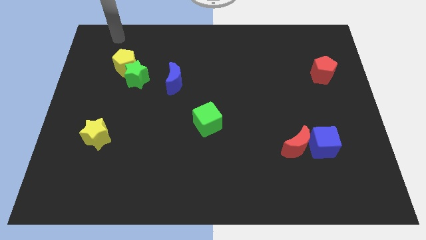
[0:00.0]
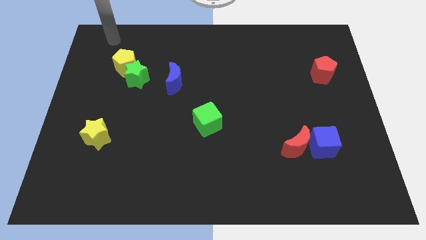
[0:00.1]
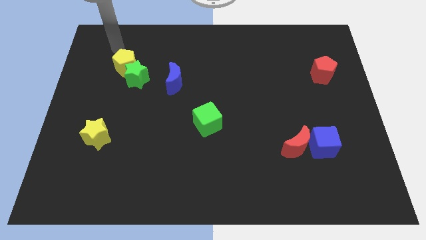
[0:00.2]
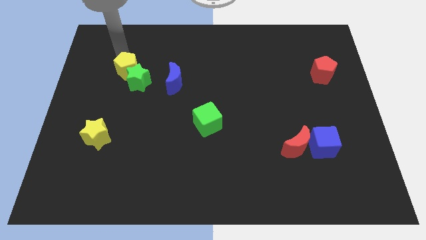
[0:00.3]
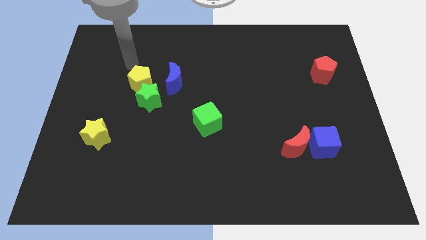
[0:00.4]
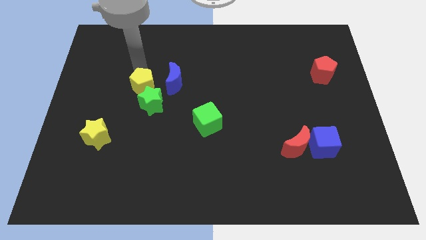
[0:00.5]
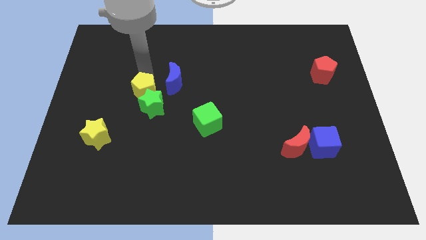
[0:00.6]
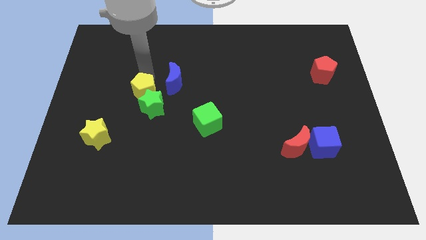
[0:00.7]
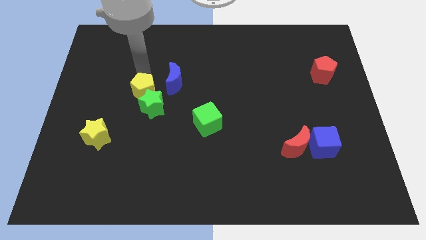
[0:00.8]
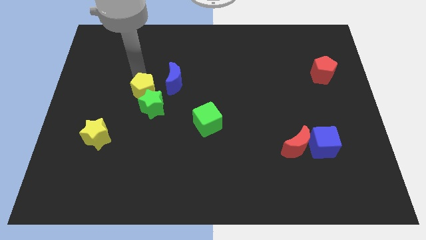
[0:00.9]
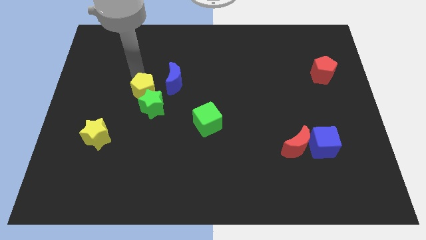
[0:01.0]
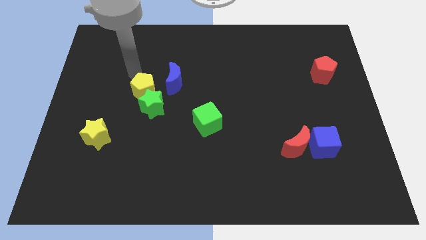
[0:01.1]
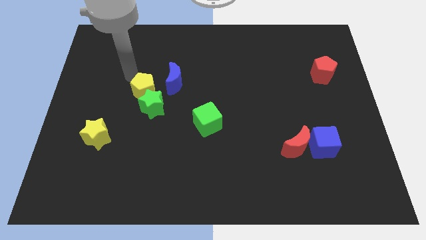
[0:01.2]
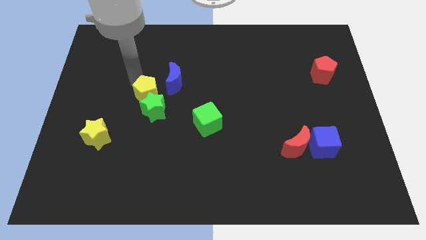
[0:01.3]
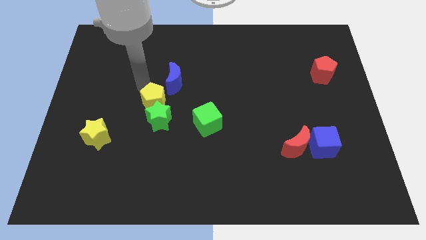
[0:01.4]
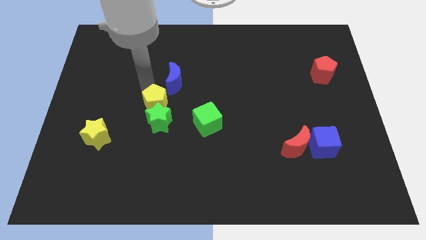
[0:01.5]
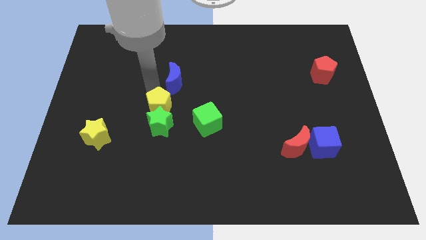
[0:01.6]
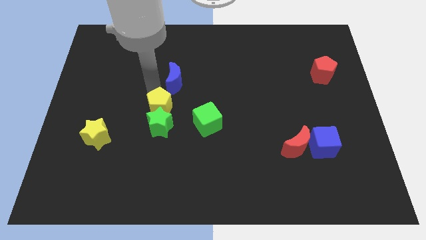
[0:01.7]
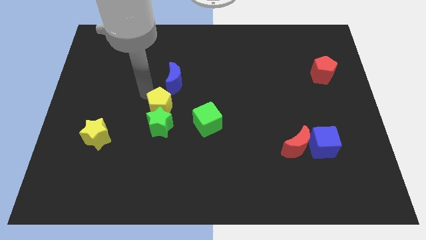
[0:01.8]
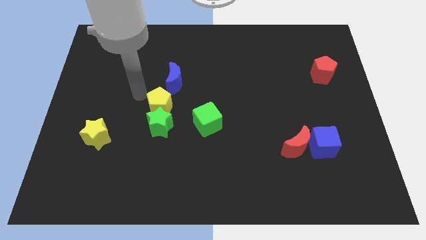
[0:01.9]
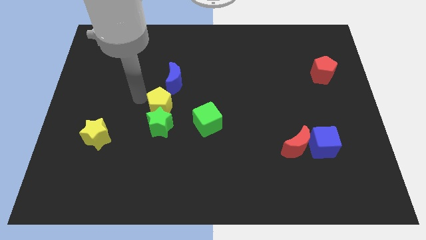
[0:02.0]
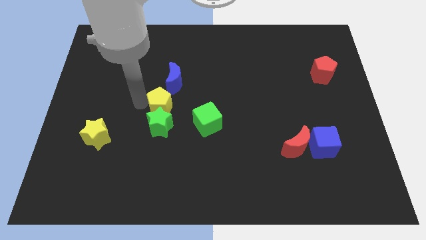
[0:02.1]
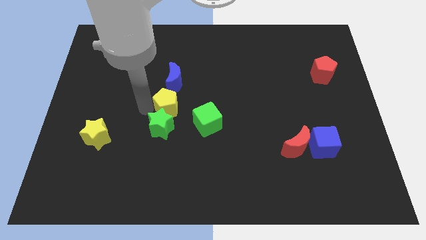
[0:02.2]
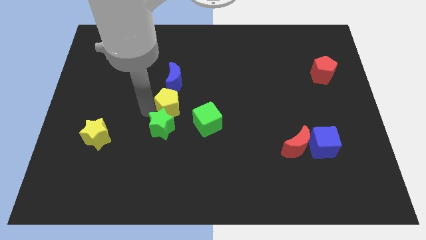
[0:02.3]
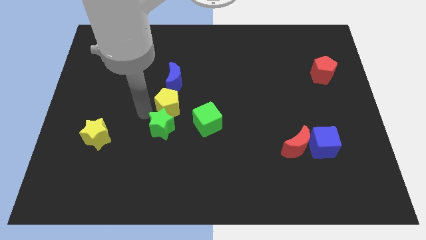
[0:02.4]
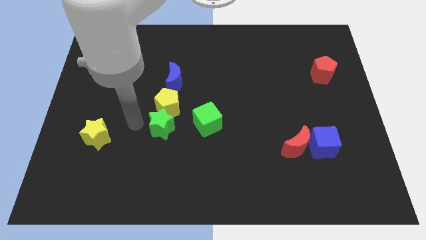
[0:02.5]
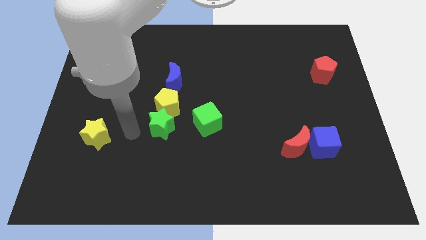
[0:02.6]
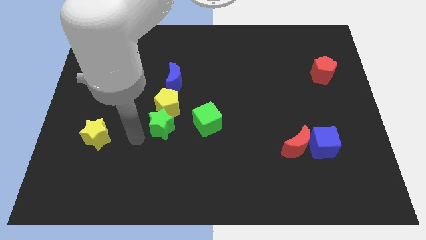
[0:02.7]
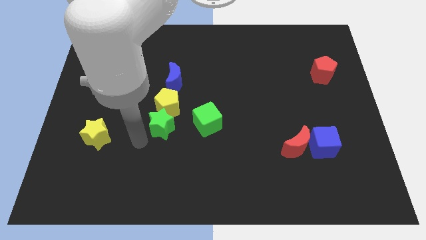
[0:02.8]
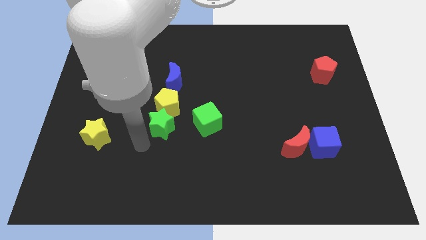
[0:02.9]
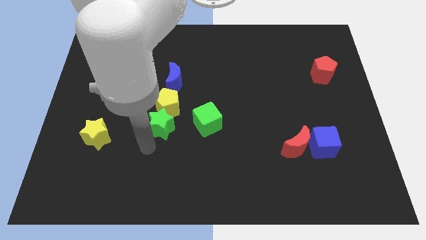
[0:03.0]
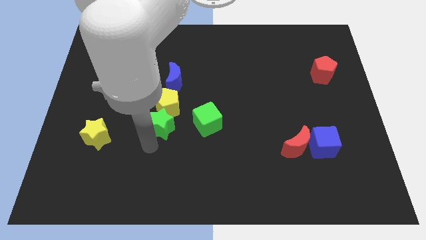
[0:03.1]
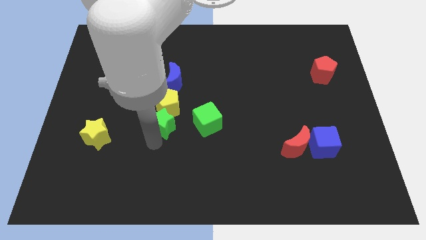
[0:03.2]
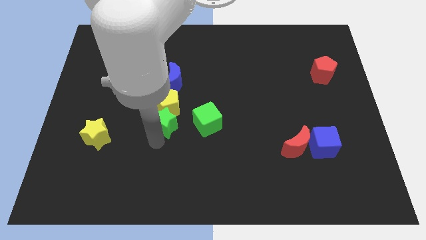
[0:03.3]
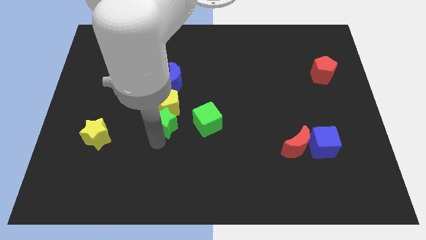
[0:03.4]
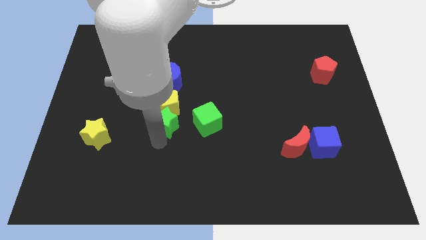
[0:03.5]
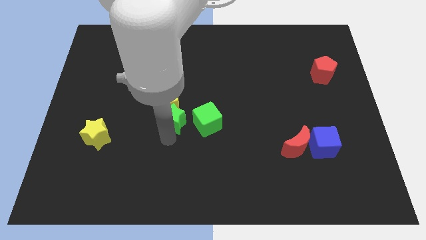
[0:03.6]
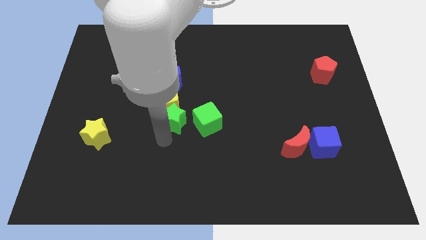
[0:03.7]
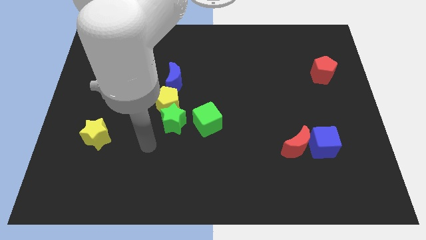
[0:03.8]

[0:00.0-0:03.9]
push the yellow pentagon along with the green star towards down

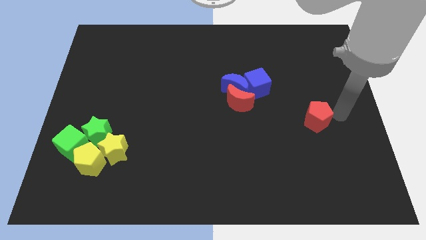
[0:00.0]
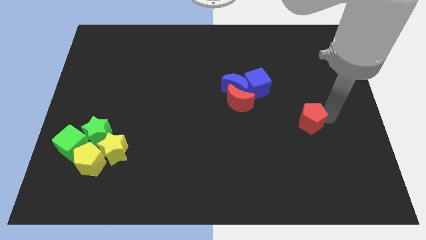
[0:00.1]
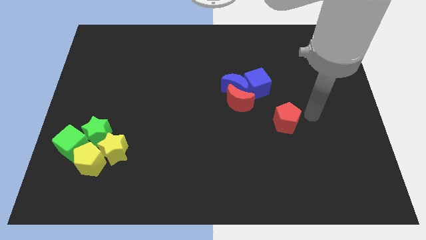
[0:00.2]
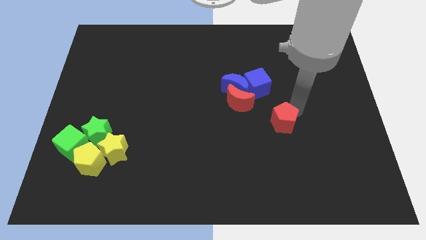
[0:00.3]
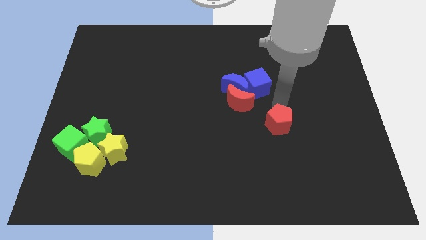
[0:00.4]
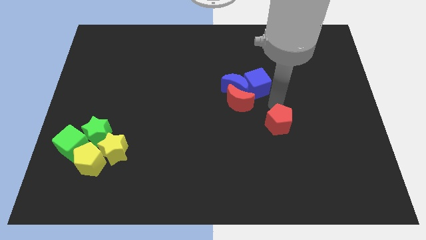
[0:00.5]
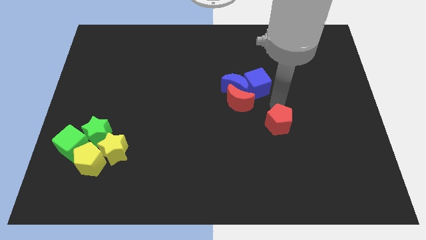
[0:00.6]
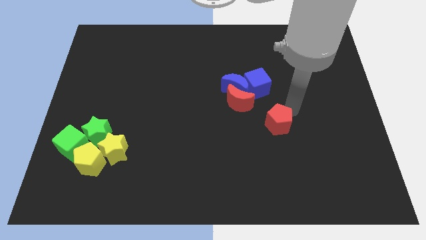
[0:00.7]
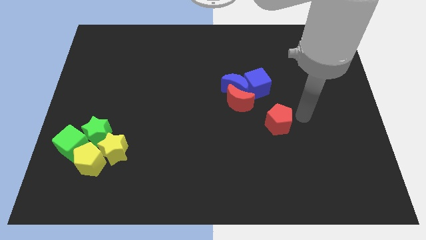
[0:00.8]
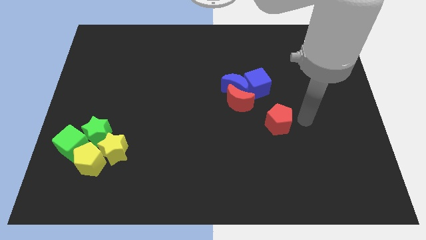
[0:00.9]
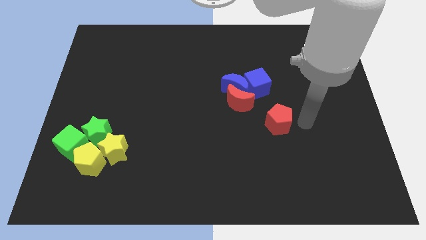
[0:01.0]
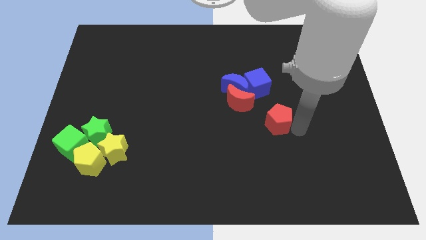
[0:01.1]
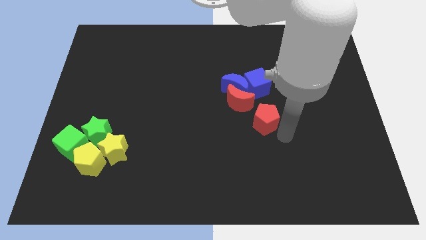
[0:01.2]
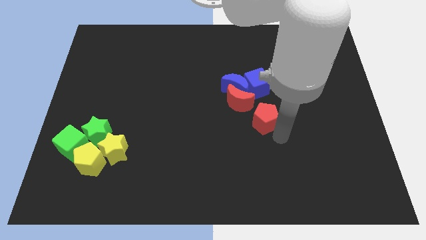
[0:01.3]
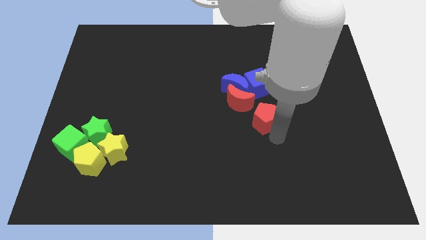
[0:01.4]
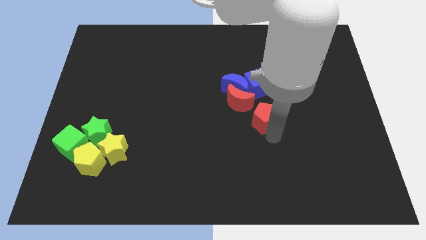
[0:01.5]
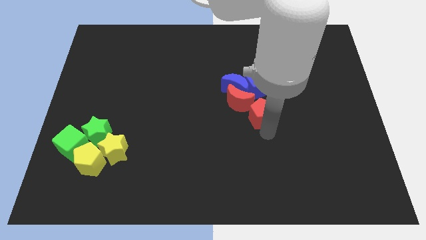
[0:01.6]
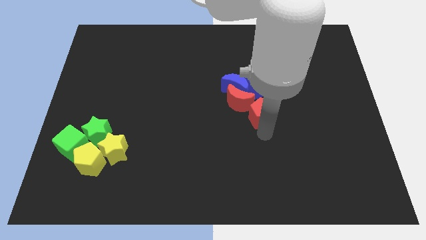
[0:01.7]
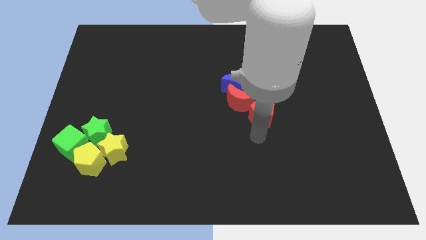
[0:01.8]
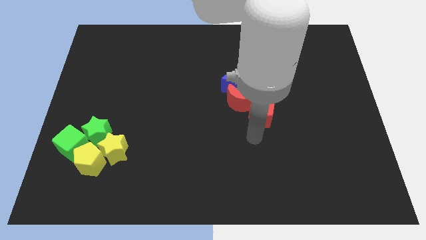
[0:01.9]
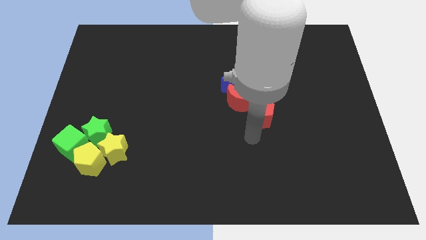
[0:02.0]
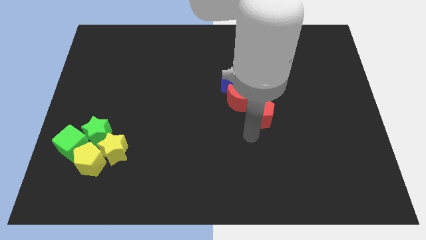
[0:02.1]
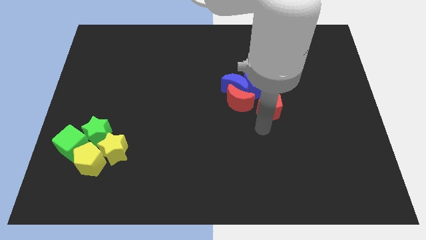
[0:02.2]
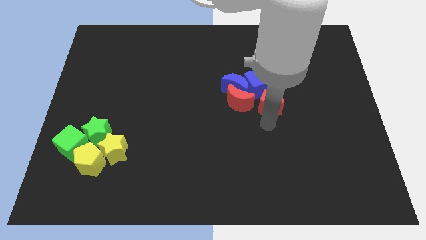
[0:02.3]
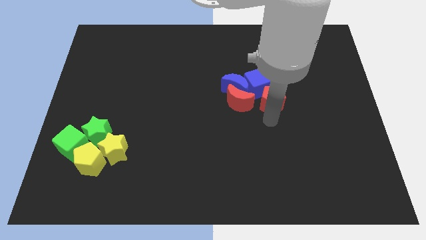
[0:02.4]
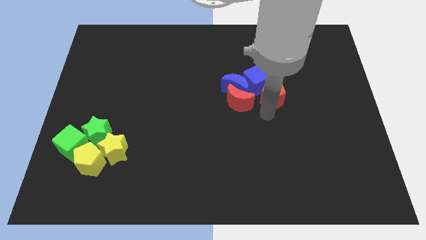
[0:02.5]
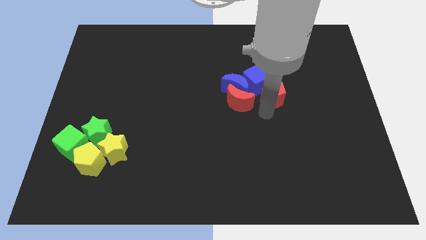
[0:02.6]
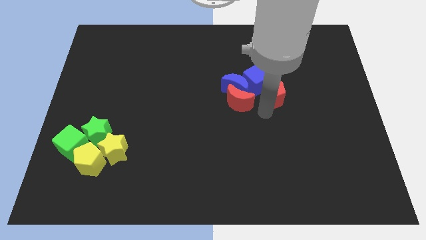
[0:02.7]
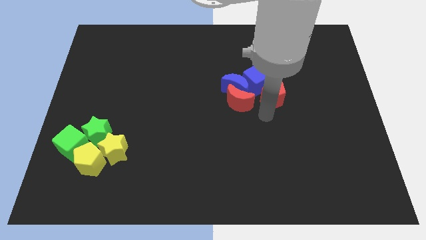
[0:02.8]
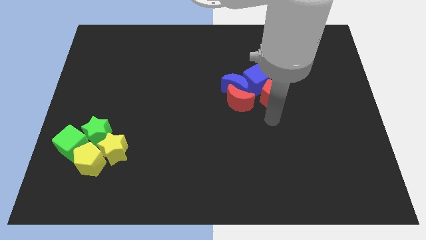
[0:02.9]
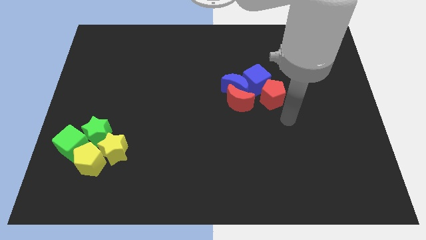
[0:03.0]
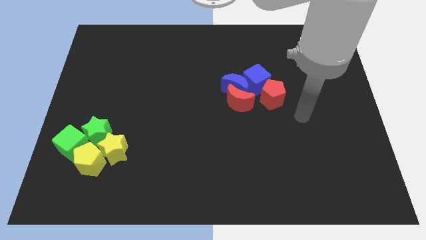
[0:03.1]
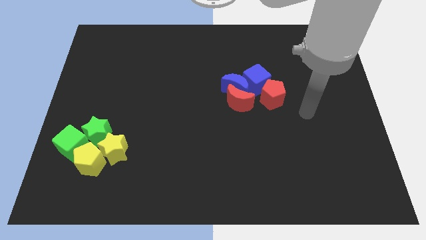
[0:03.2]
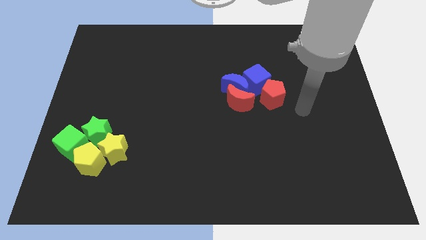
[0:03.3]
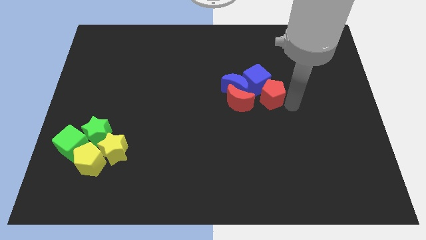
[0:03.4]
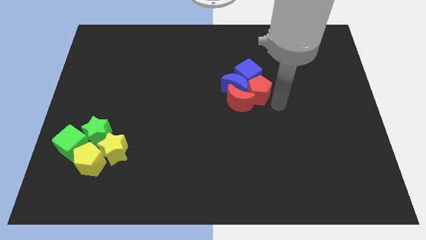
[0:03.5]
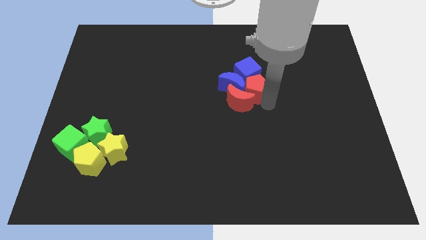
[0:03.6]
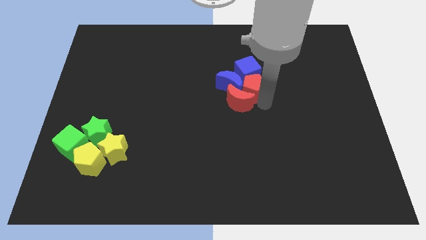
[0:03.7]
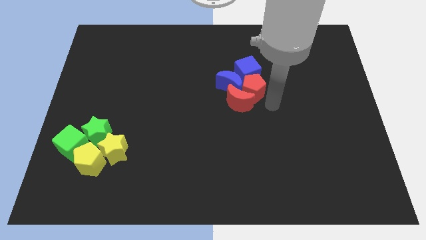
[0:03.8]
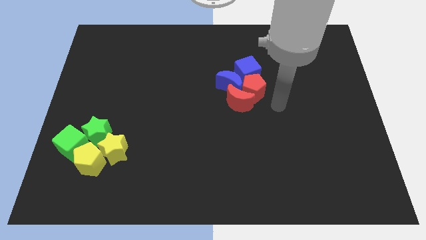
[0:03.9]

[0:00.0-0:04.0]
push the red pentagon to the bottom of the blue cube on the board

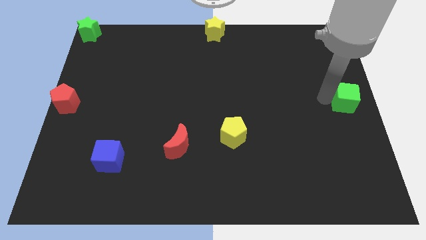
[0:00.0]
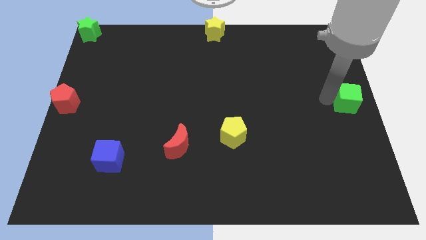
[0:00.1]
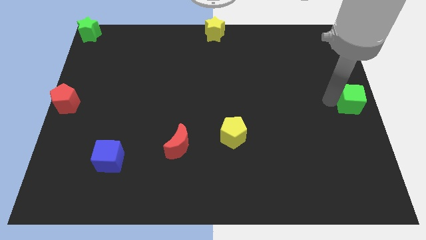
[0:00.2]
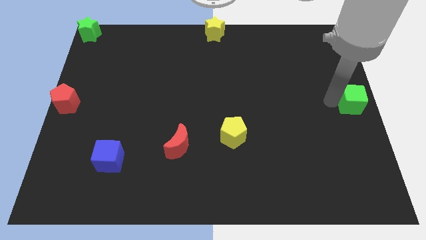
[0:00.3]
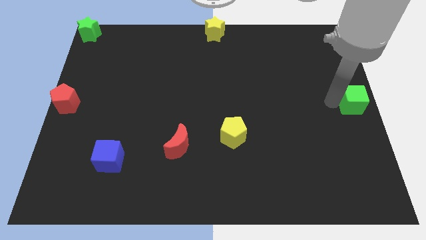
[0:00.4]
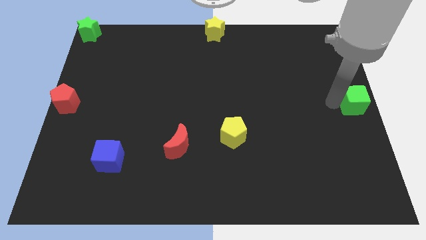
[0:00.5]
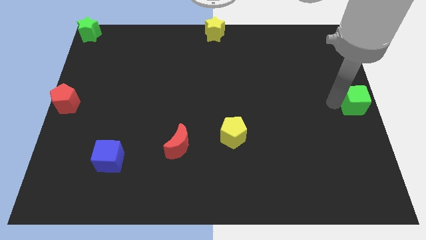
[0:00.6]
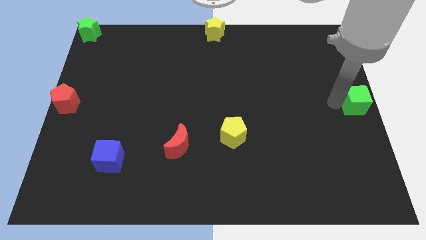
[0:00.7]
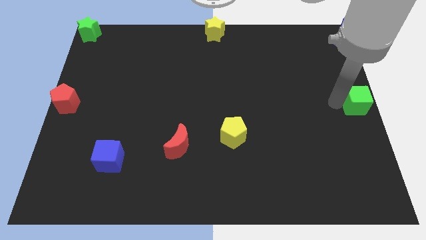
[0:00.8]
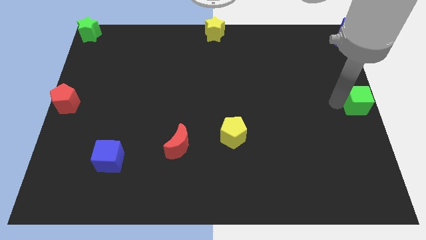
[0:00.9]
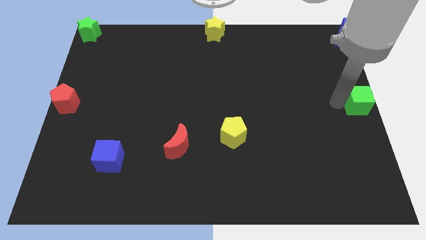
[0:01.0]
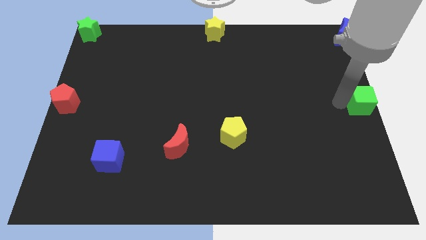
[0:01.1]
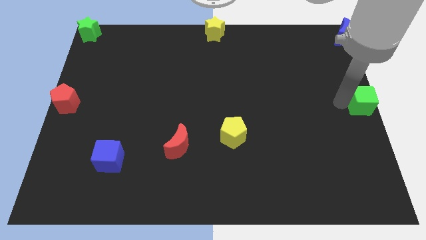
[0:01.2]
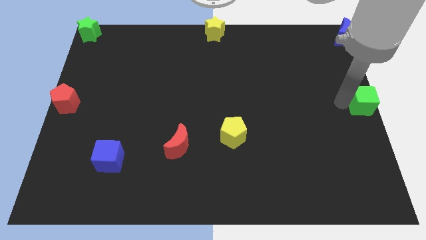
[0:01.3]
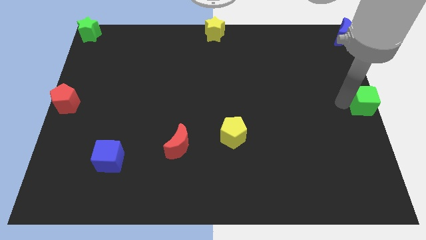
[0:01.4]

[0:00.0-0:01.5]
place green cube towards the right center of the board
